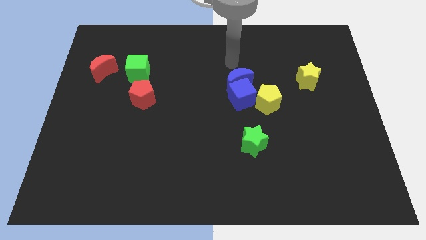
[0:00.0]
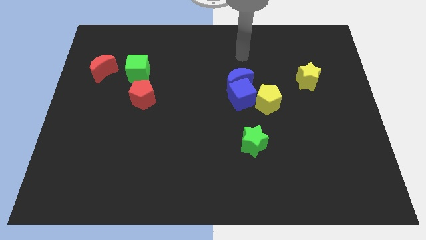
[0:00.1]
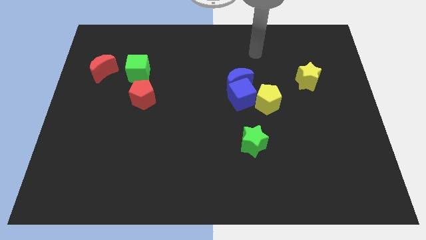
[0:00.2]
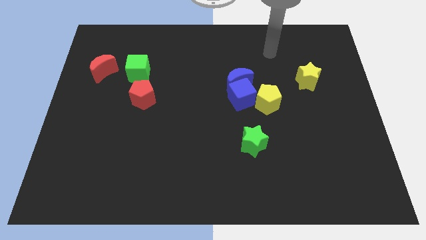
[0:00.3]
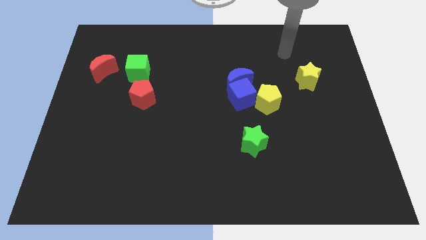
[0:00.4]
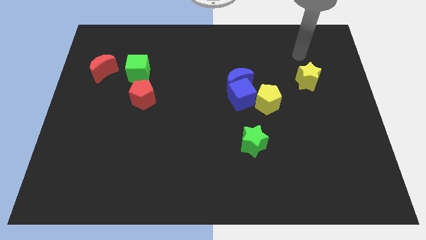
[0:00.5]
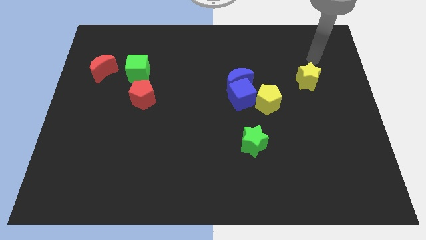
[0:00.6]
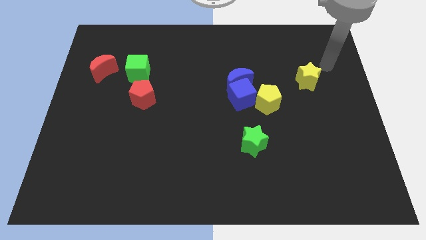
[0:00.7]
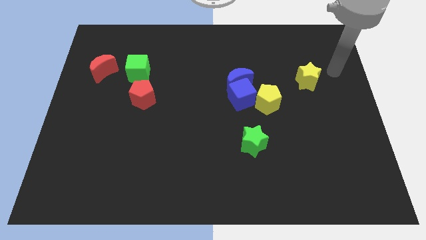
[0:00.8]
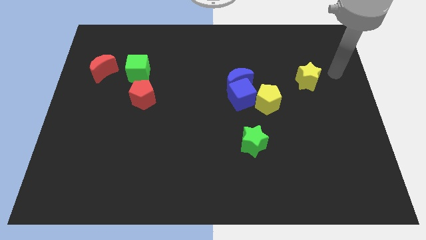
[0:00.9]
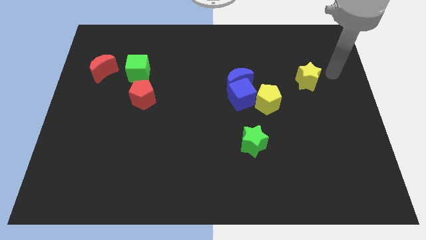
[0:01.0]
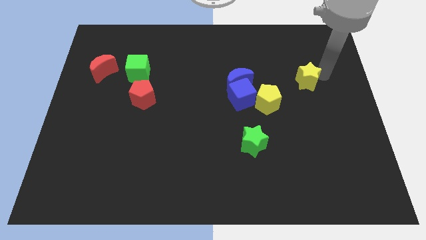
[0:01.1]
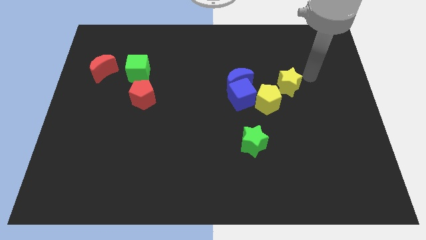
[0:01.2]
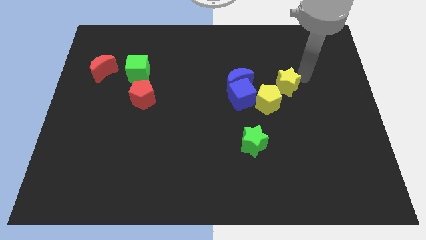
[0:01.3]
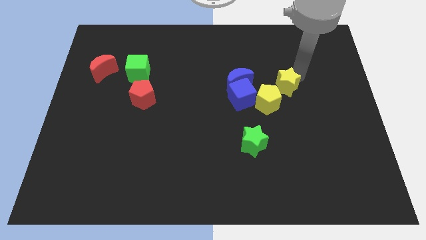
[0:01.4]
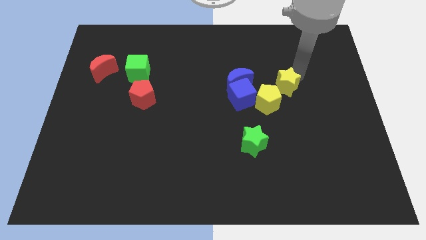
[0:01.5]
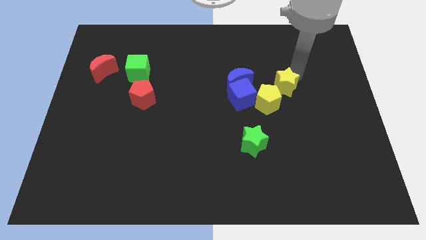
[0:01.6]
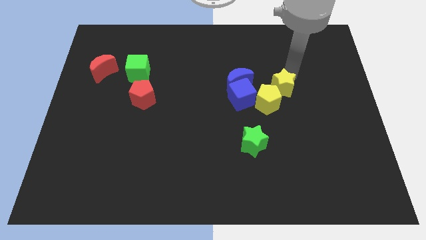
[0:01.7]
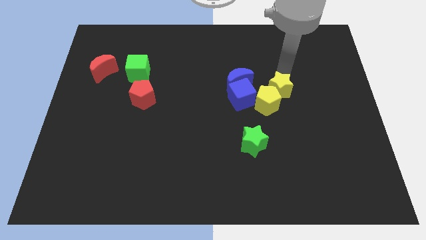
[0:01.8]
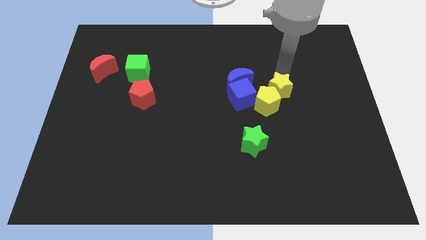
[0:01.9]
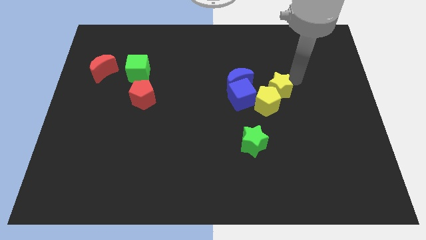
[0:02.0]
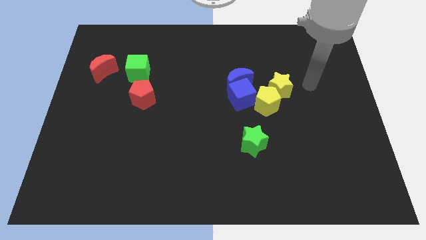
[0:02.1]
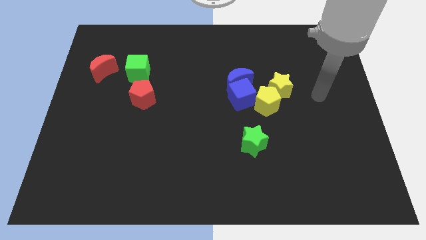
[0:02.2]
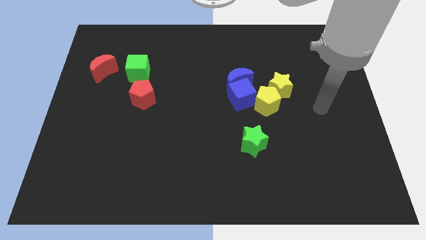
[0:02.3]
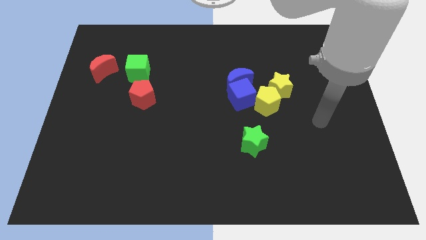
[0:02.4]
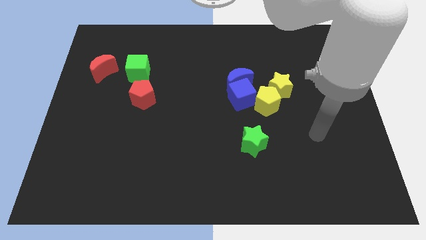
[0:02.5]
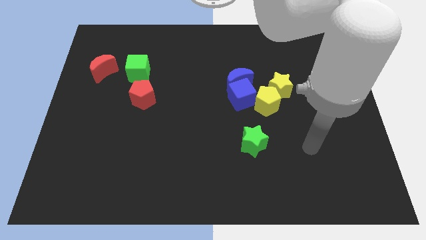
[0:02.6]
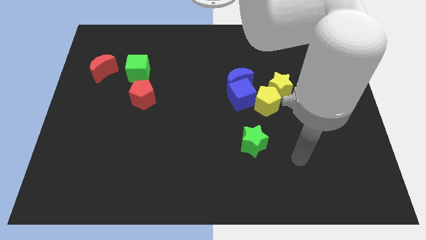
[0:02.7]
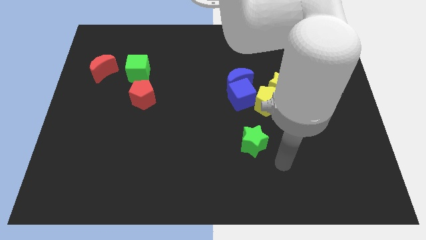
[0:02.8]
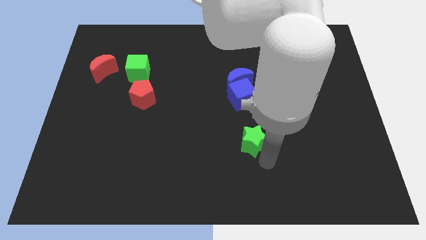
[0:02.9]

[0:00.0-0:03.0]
move the yellow star towards the yellow pentagon

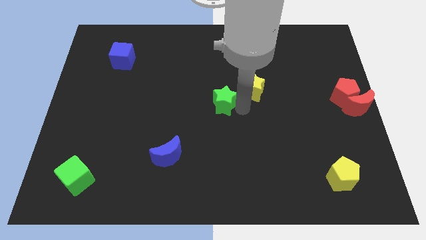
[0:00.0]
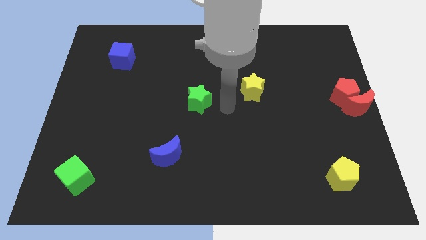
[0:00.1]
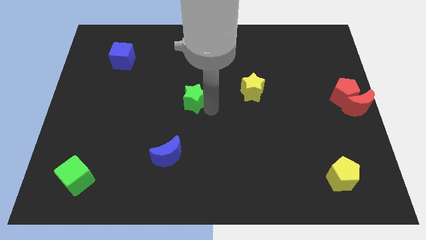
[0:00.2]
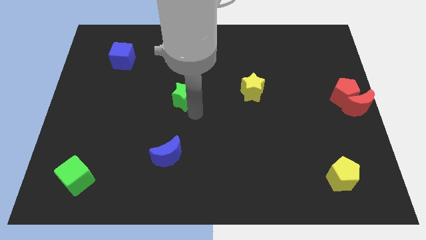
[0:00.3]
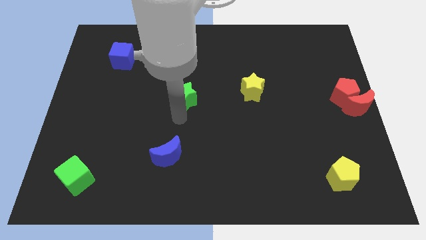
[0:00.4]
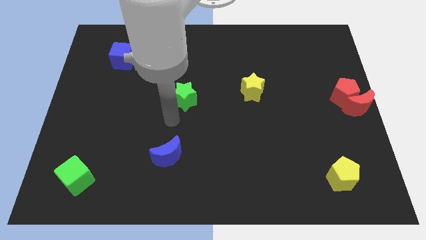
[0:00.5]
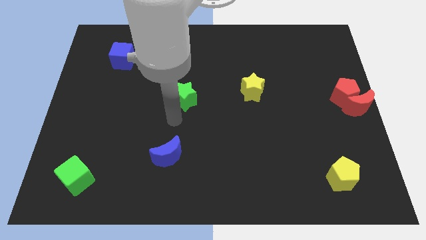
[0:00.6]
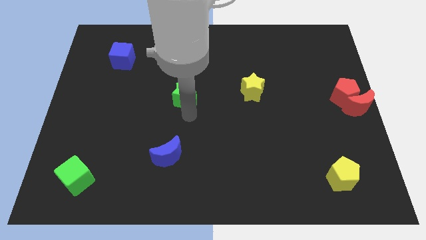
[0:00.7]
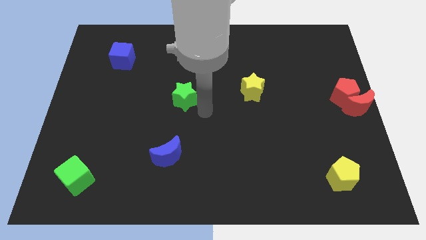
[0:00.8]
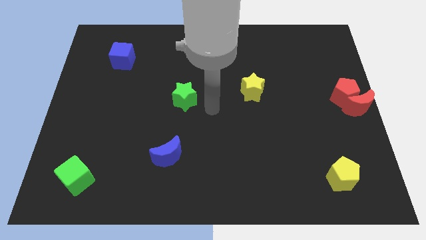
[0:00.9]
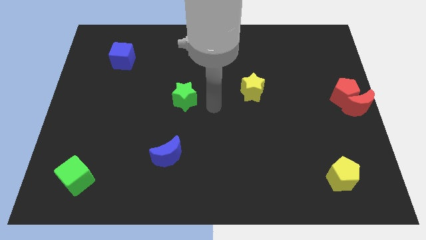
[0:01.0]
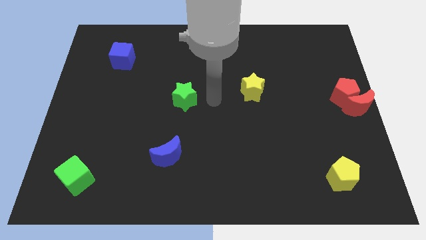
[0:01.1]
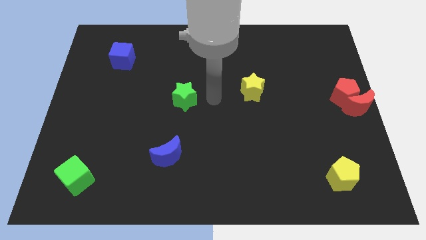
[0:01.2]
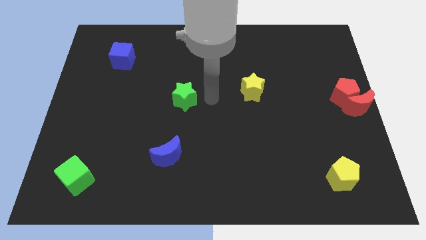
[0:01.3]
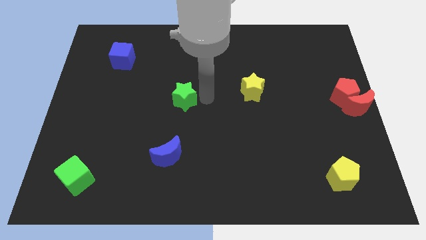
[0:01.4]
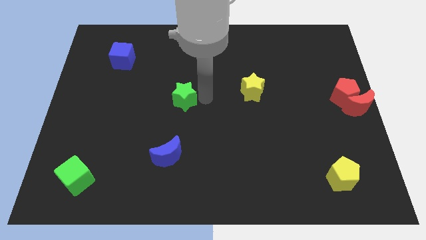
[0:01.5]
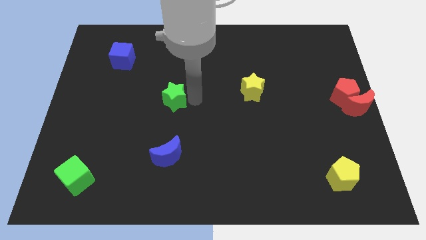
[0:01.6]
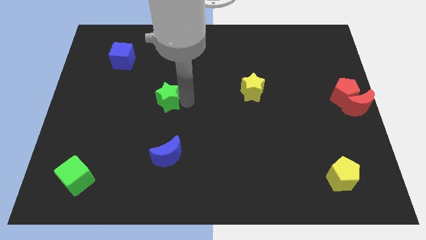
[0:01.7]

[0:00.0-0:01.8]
place the green star above the blue moon

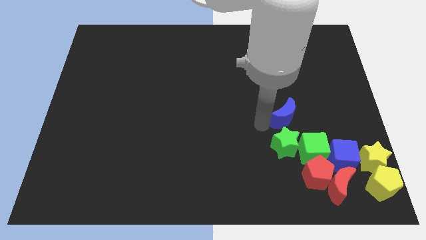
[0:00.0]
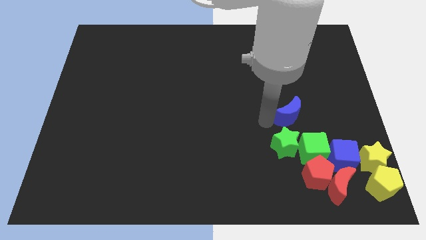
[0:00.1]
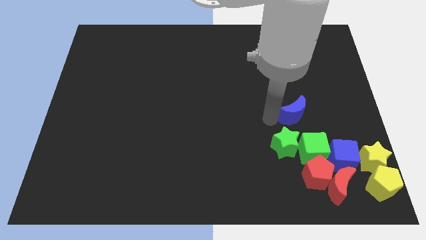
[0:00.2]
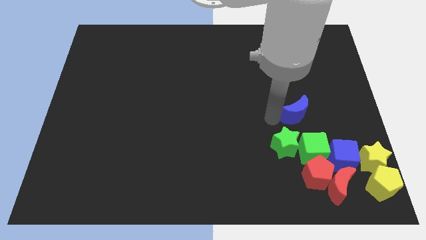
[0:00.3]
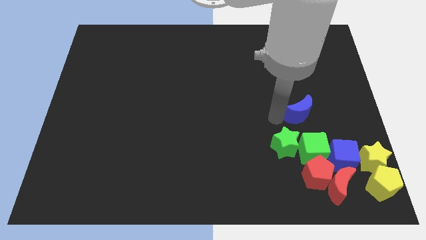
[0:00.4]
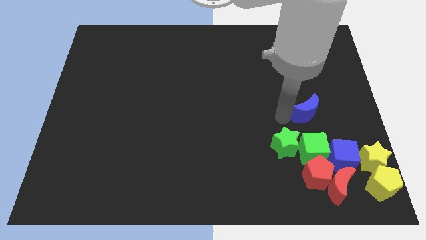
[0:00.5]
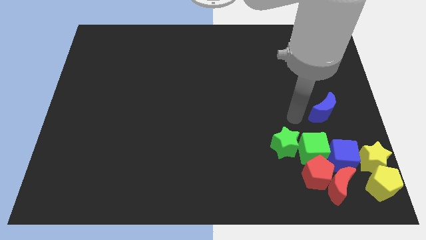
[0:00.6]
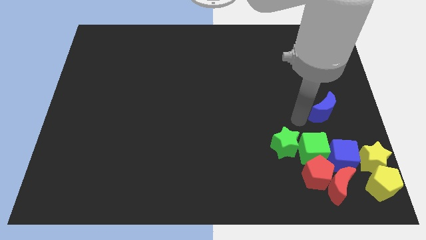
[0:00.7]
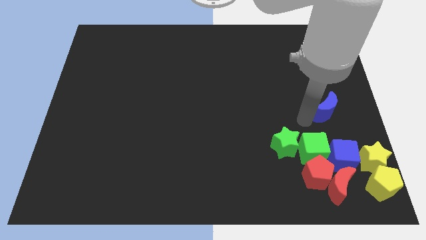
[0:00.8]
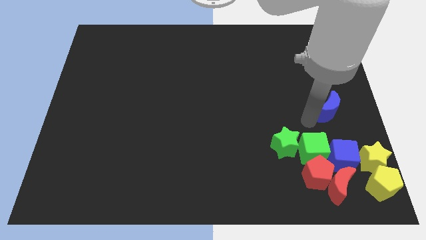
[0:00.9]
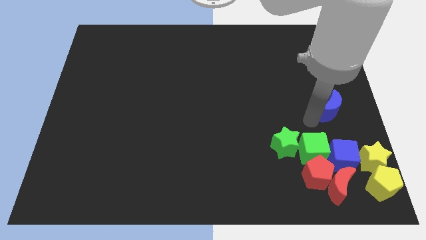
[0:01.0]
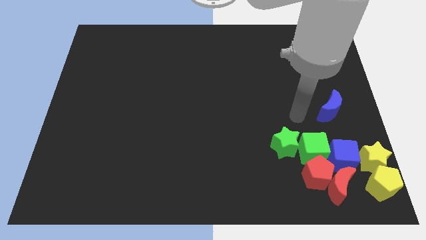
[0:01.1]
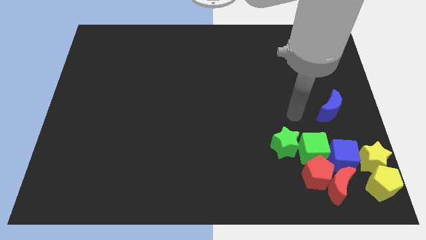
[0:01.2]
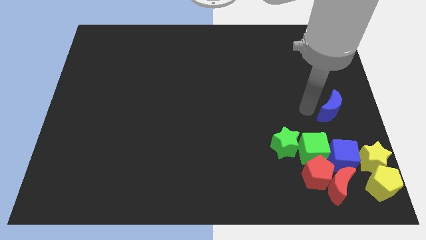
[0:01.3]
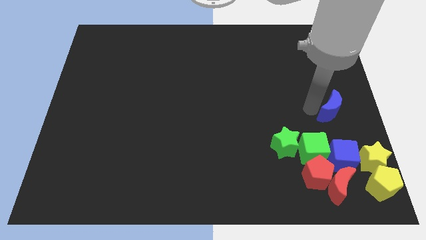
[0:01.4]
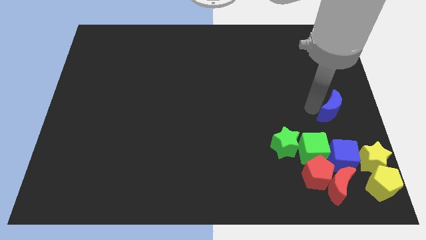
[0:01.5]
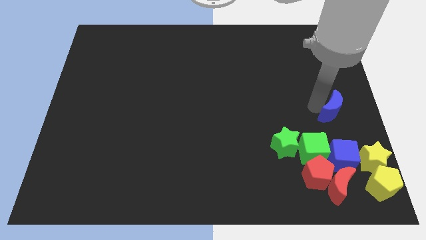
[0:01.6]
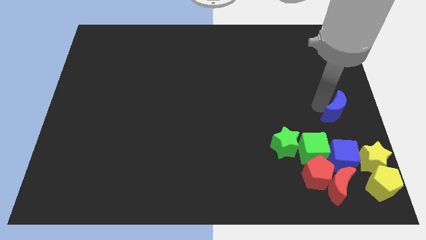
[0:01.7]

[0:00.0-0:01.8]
place the blue moon above the blue cube

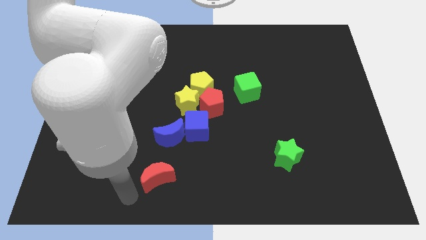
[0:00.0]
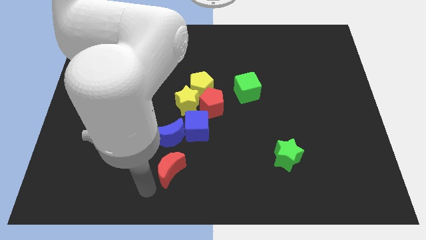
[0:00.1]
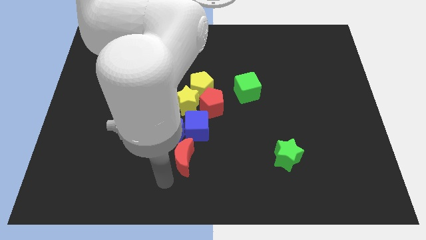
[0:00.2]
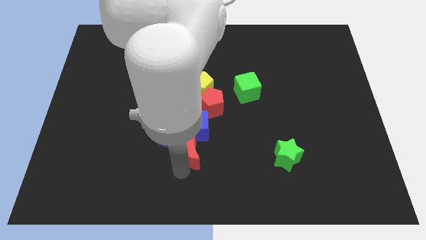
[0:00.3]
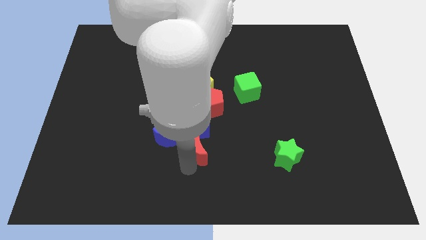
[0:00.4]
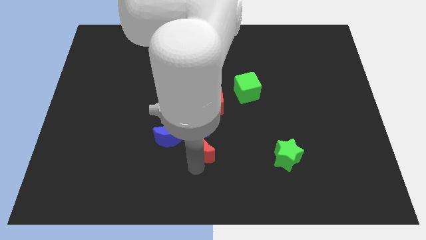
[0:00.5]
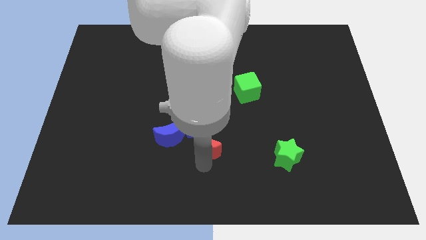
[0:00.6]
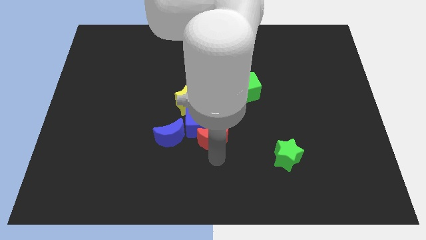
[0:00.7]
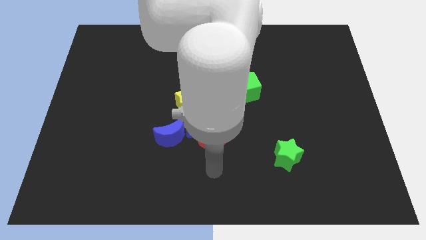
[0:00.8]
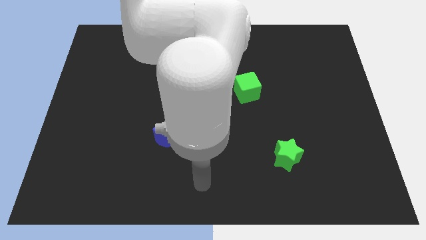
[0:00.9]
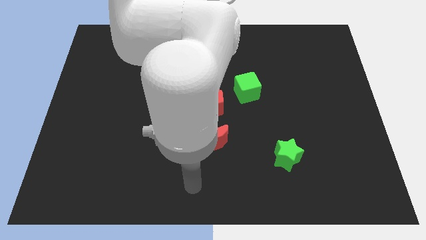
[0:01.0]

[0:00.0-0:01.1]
move the red crescent to the bottom of the blue cube

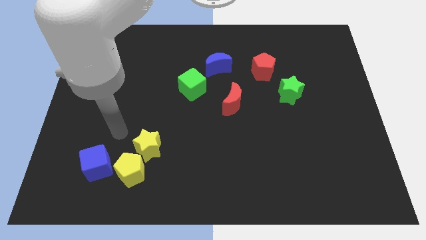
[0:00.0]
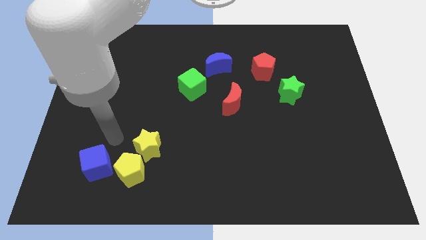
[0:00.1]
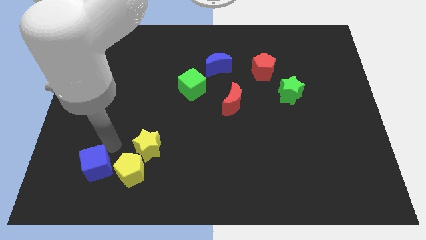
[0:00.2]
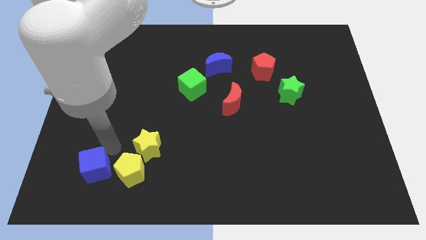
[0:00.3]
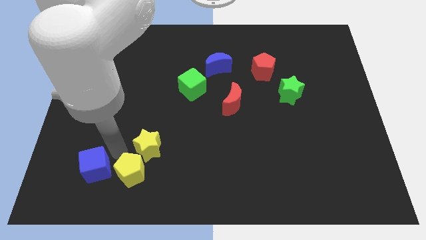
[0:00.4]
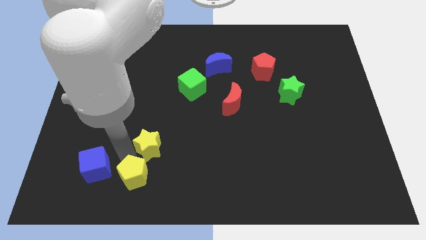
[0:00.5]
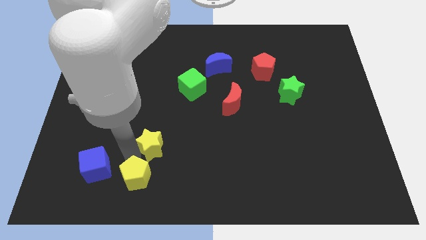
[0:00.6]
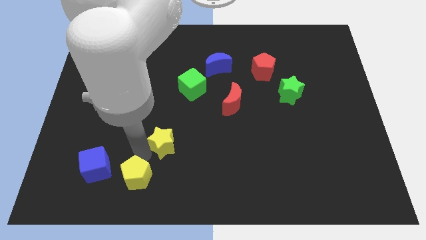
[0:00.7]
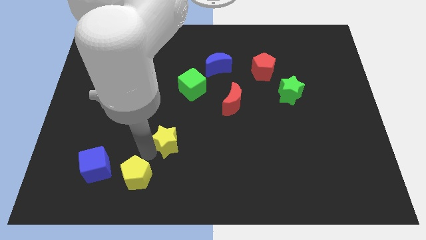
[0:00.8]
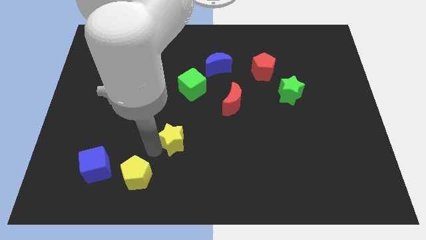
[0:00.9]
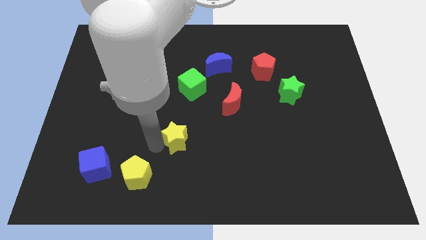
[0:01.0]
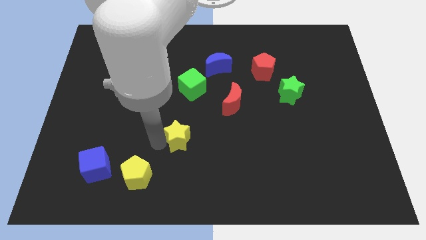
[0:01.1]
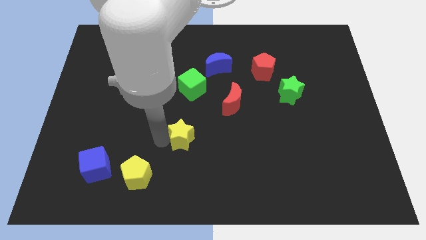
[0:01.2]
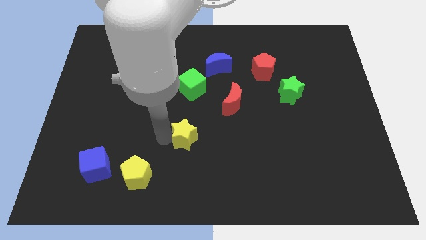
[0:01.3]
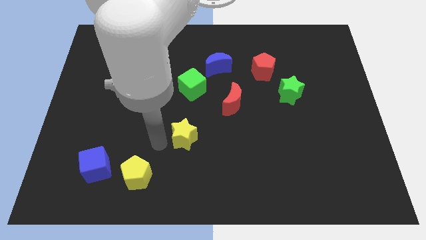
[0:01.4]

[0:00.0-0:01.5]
separate the yellow star and the yellow pentagon
